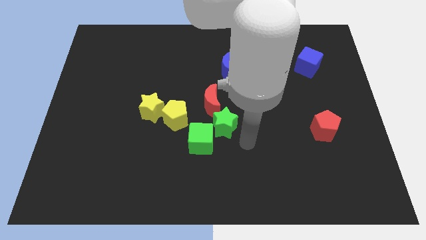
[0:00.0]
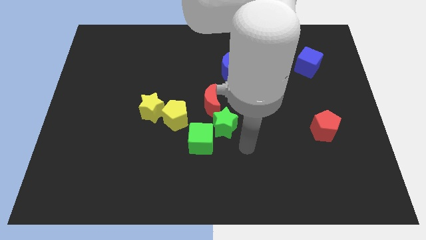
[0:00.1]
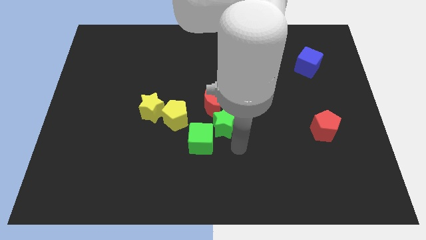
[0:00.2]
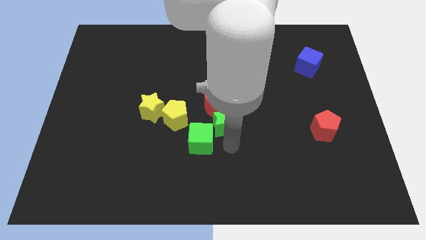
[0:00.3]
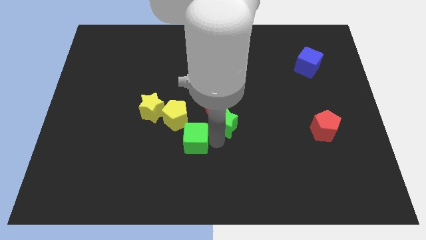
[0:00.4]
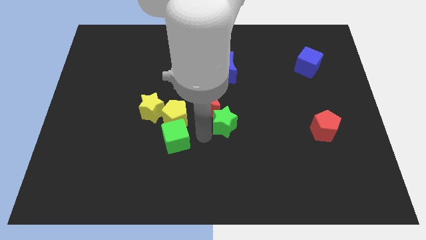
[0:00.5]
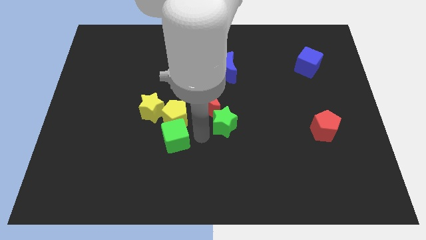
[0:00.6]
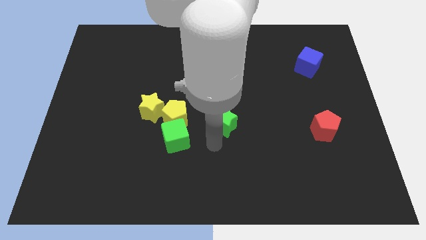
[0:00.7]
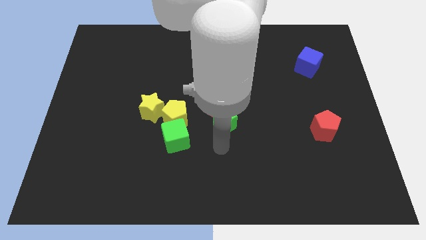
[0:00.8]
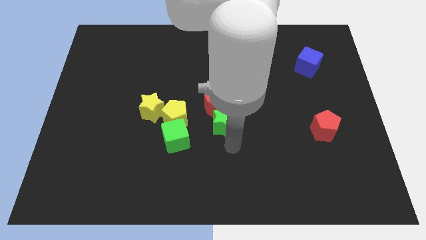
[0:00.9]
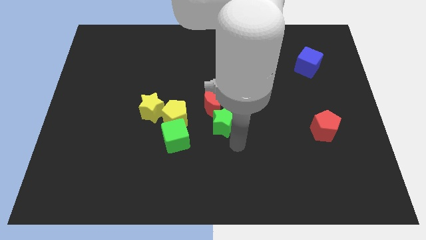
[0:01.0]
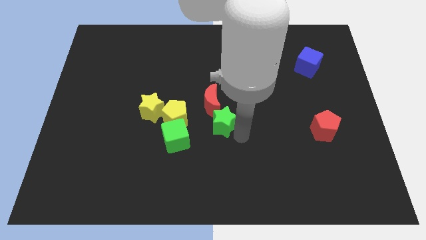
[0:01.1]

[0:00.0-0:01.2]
place the green cube below the yellow pentagon

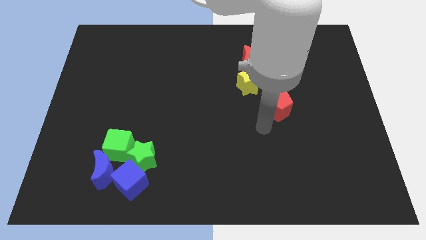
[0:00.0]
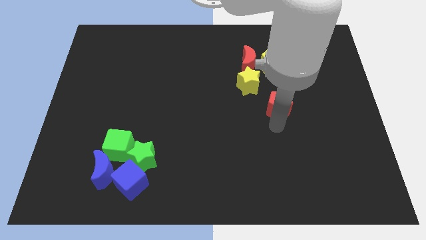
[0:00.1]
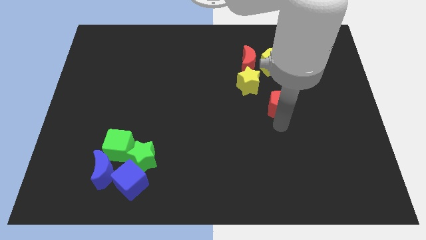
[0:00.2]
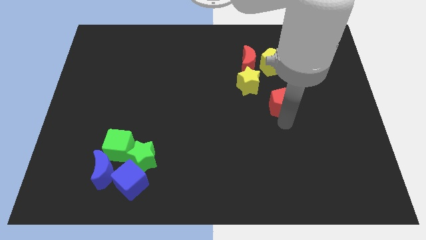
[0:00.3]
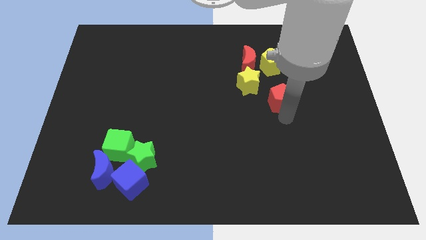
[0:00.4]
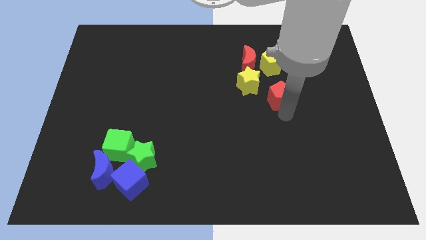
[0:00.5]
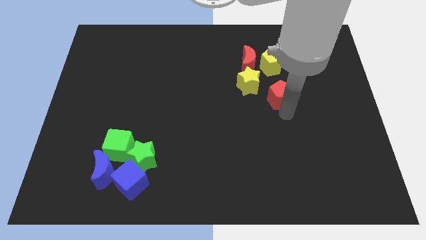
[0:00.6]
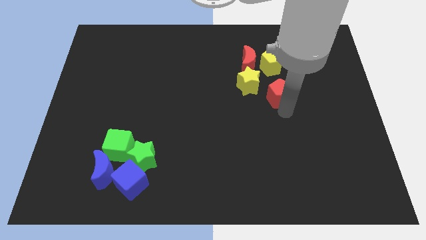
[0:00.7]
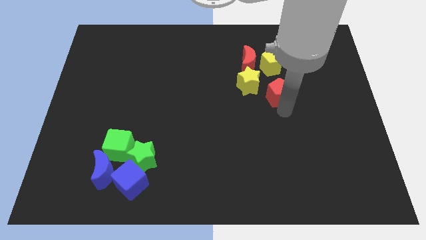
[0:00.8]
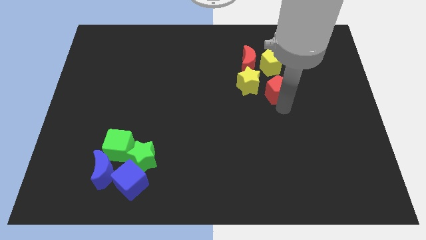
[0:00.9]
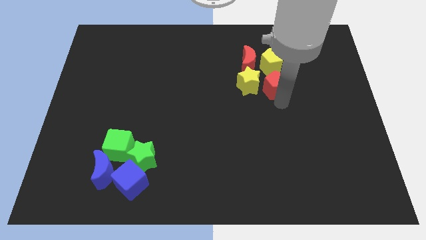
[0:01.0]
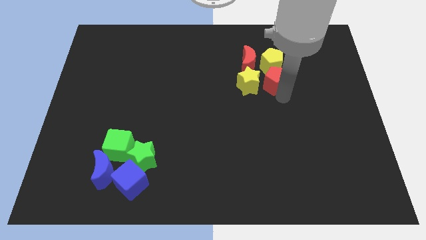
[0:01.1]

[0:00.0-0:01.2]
push the red pentagon closer to the yellow pentagon

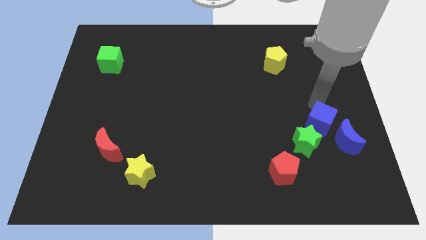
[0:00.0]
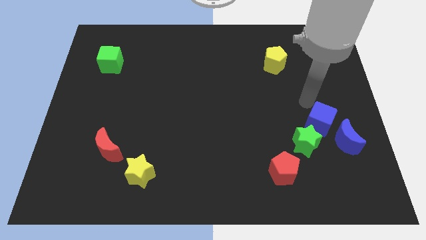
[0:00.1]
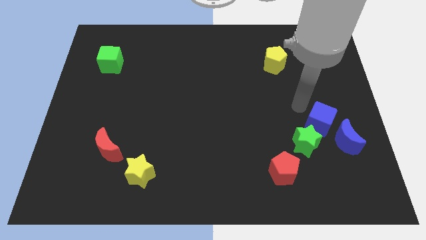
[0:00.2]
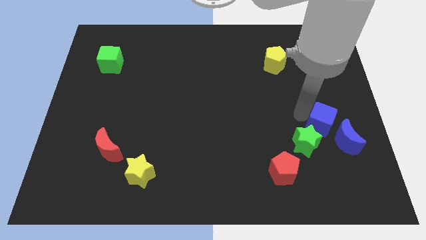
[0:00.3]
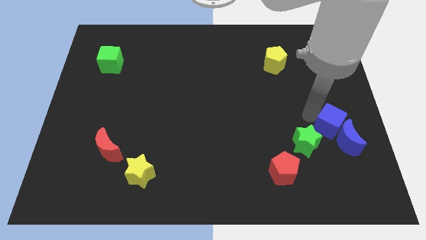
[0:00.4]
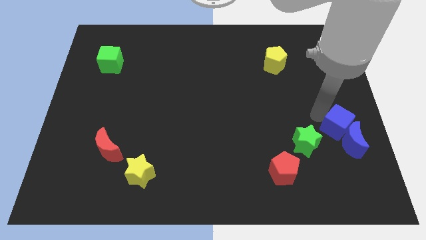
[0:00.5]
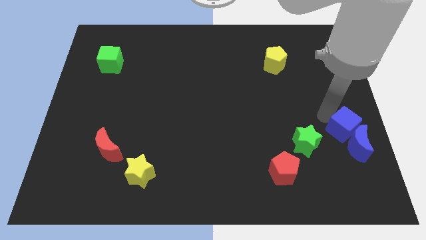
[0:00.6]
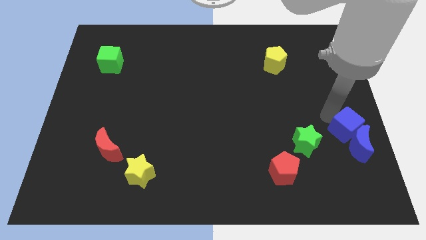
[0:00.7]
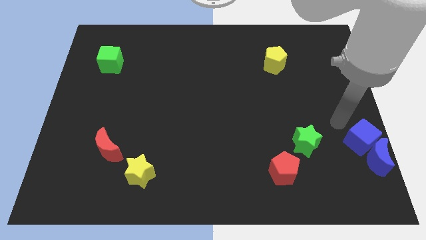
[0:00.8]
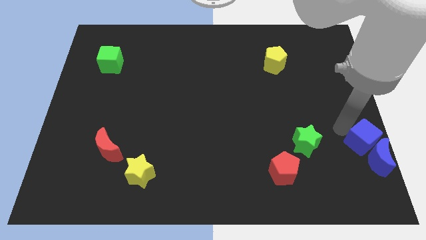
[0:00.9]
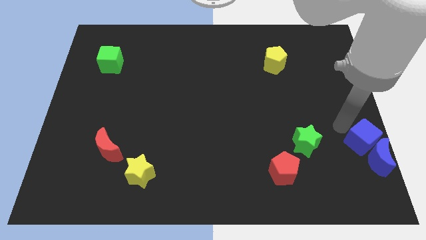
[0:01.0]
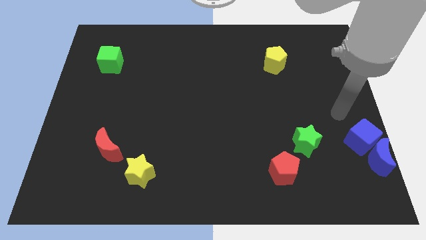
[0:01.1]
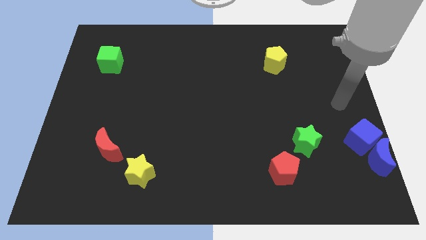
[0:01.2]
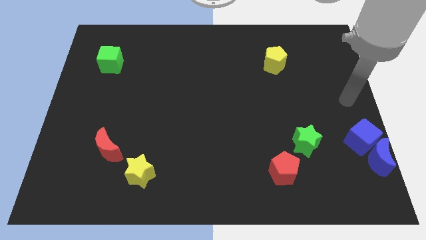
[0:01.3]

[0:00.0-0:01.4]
push blue moon and blue cube towards bottom right side of the board

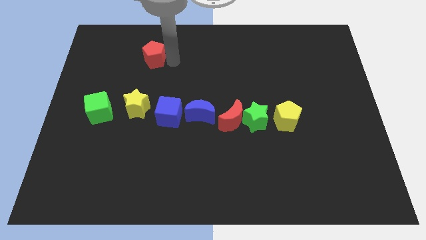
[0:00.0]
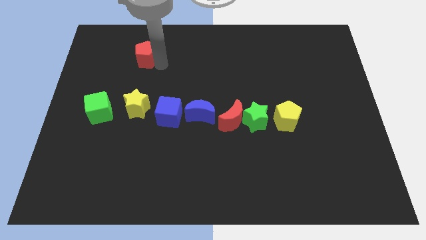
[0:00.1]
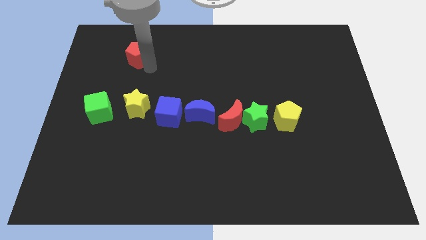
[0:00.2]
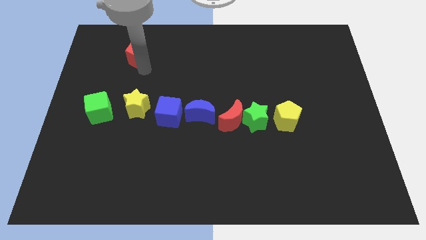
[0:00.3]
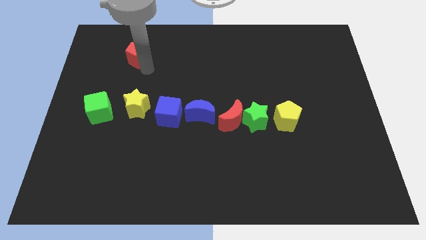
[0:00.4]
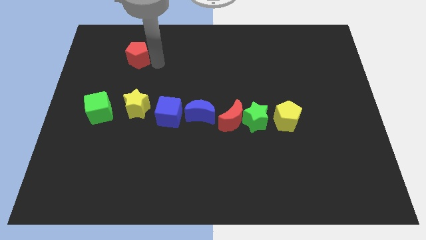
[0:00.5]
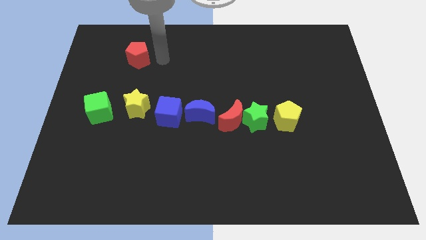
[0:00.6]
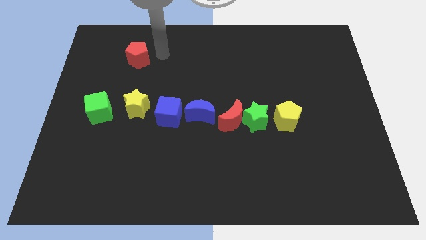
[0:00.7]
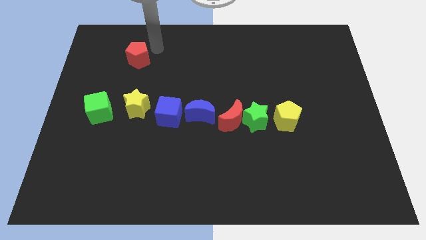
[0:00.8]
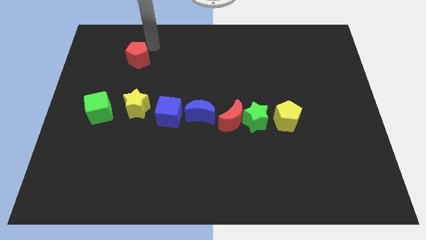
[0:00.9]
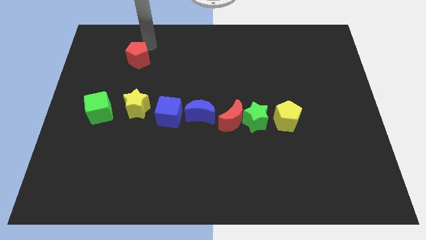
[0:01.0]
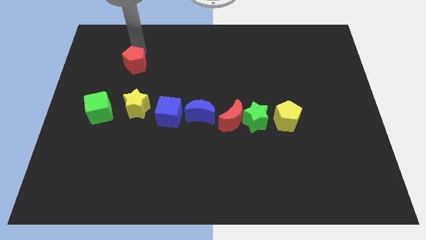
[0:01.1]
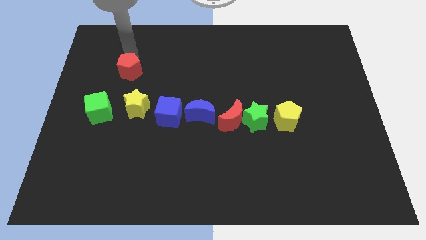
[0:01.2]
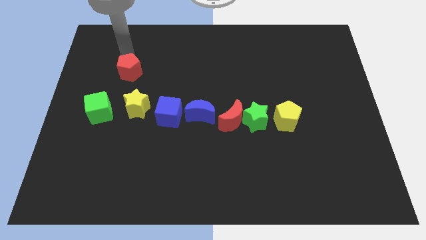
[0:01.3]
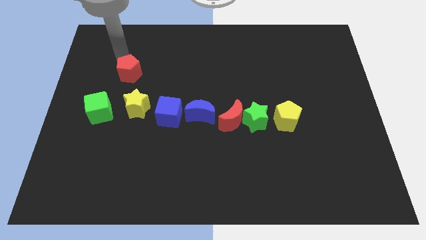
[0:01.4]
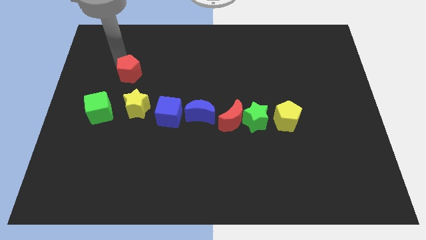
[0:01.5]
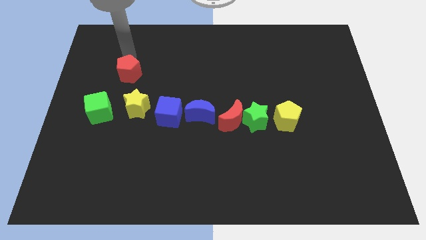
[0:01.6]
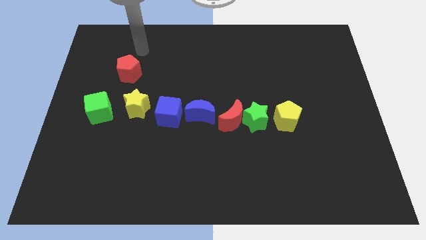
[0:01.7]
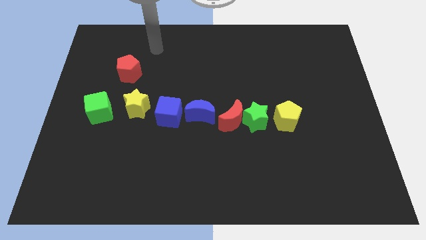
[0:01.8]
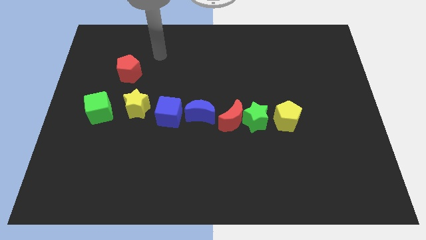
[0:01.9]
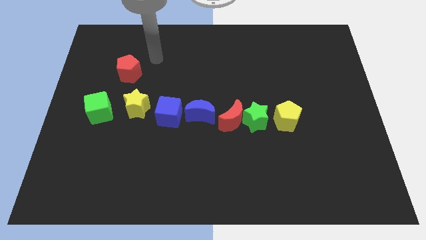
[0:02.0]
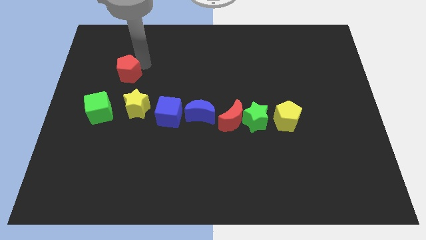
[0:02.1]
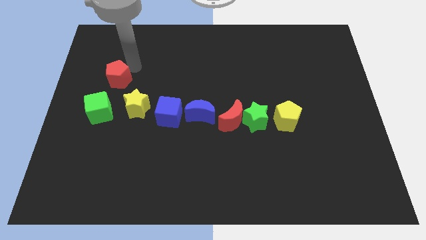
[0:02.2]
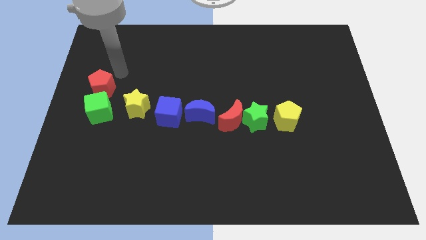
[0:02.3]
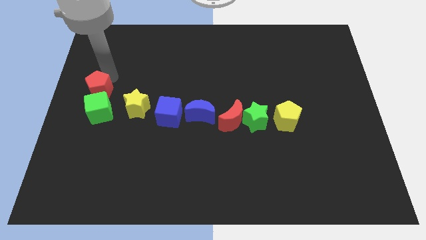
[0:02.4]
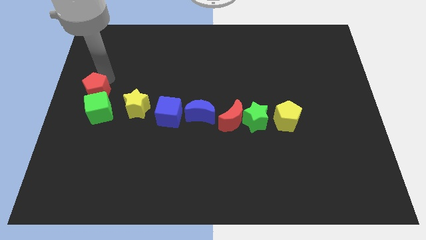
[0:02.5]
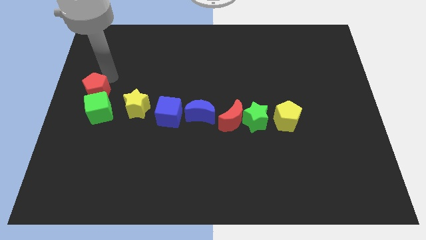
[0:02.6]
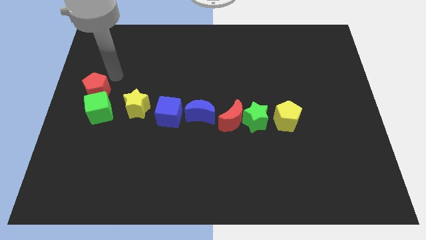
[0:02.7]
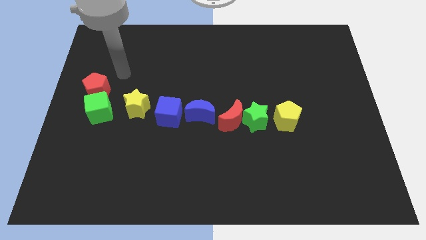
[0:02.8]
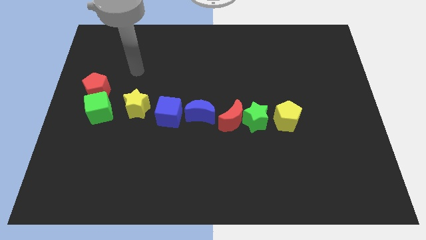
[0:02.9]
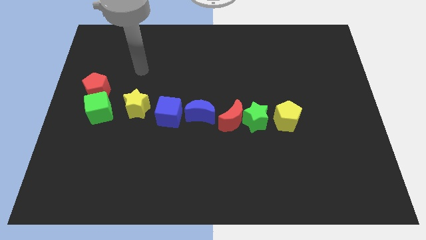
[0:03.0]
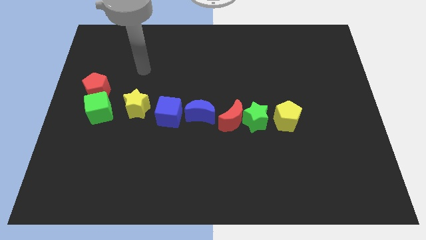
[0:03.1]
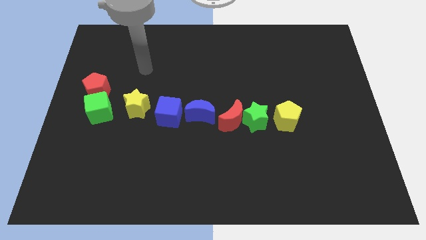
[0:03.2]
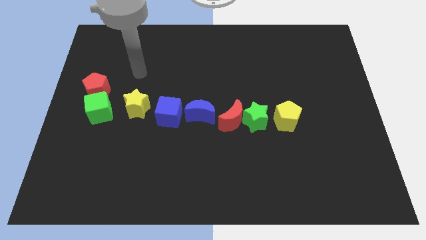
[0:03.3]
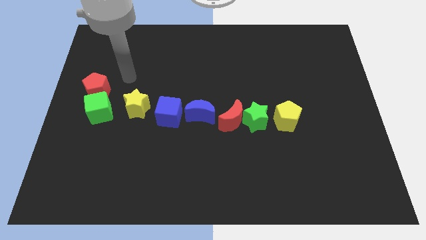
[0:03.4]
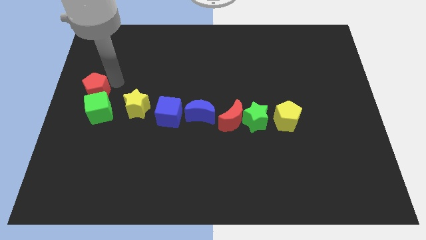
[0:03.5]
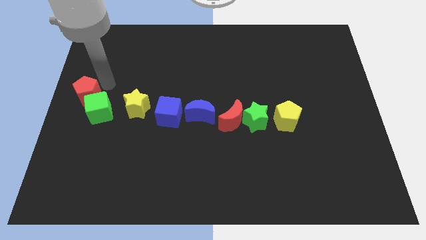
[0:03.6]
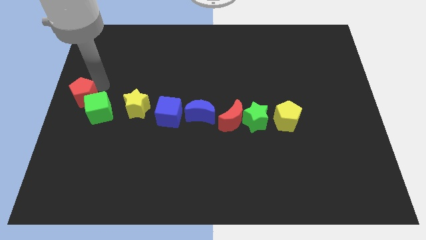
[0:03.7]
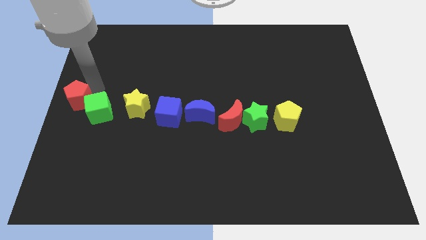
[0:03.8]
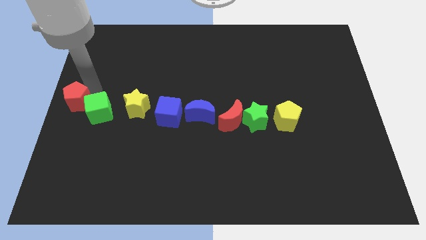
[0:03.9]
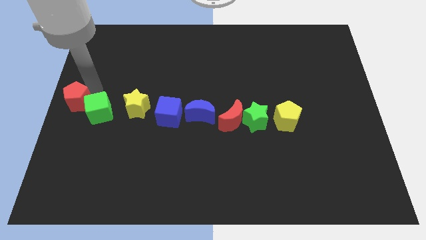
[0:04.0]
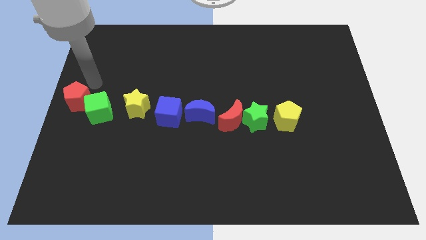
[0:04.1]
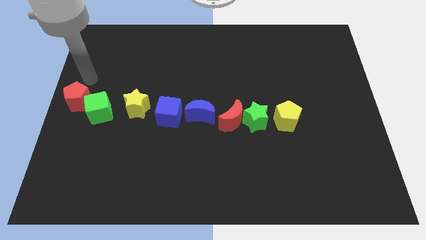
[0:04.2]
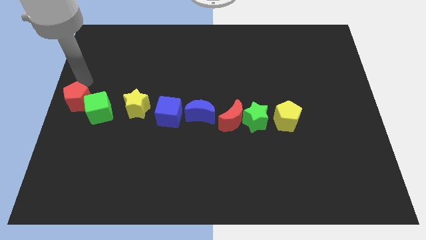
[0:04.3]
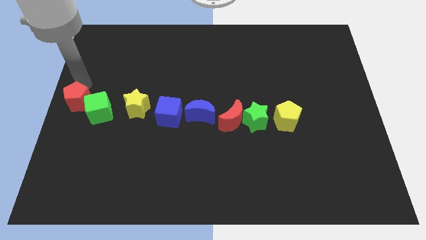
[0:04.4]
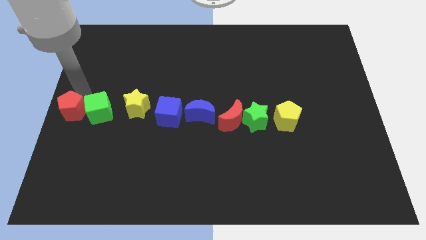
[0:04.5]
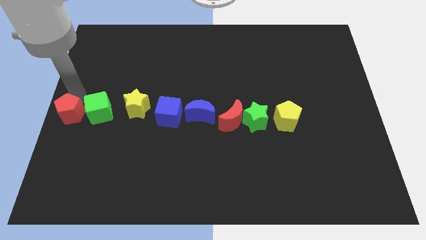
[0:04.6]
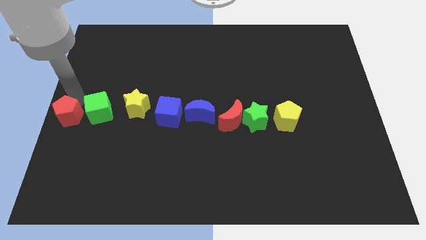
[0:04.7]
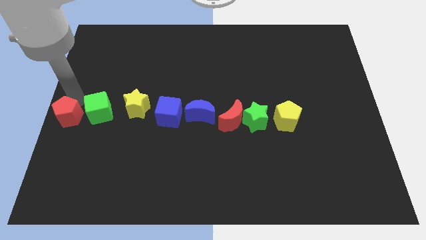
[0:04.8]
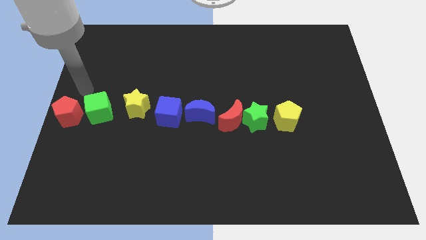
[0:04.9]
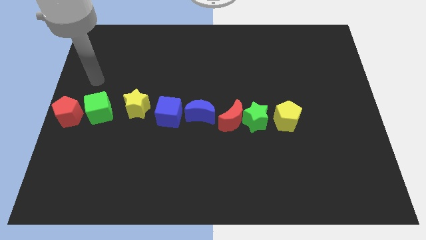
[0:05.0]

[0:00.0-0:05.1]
move the red pentagon to the top of green cube

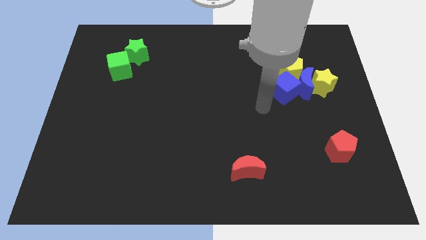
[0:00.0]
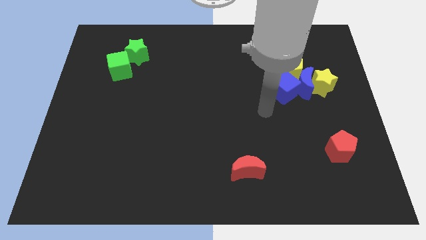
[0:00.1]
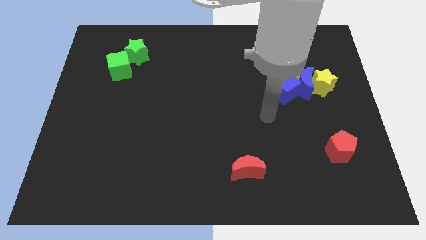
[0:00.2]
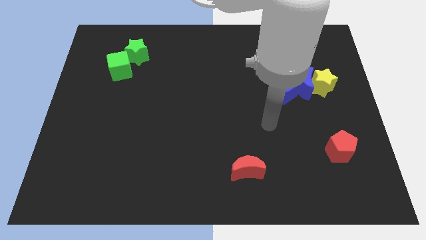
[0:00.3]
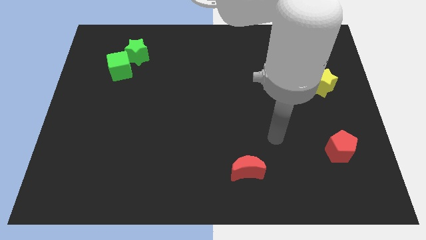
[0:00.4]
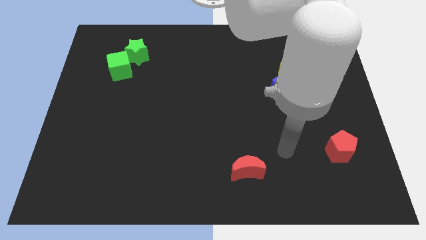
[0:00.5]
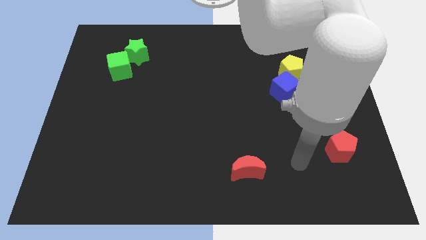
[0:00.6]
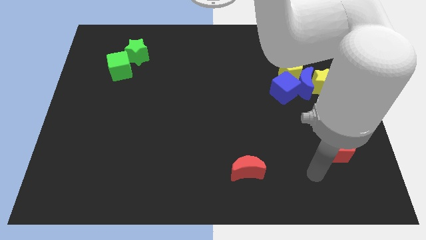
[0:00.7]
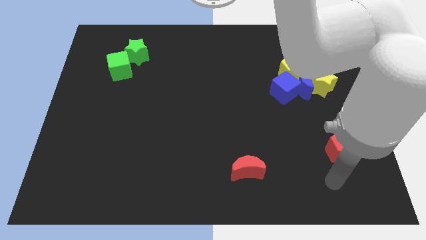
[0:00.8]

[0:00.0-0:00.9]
move your arm towards the bottom side of the board
